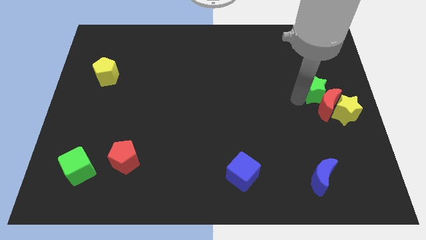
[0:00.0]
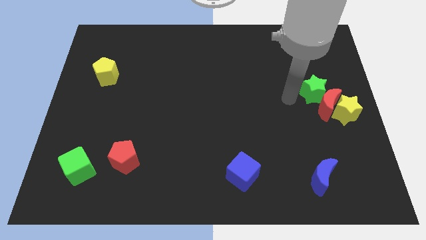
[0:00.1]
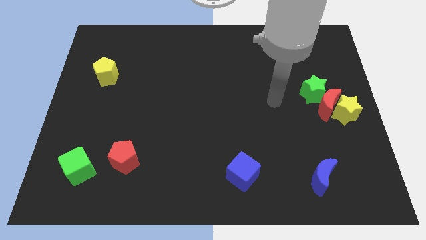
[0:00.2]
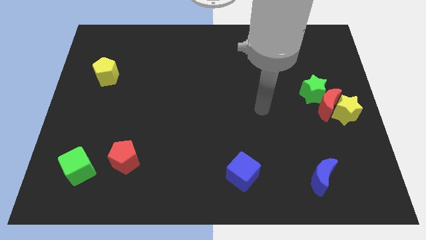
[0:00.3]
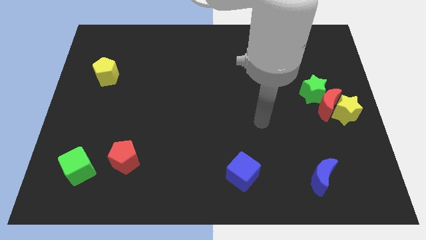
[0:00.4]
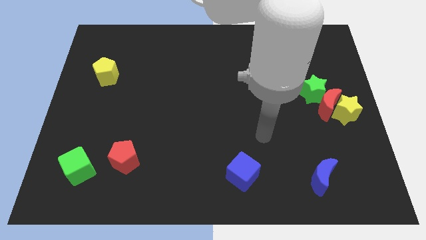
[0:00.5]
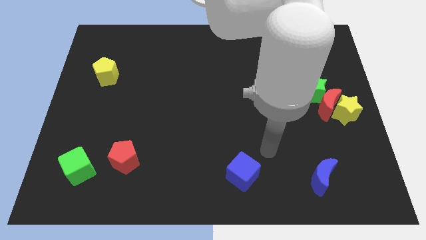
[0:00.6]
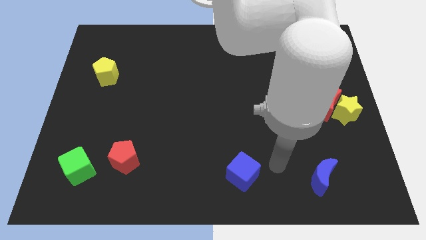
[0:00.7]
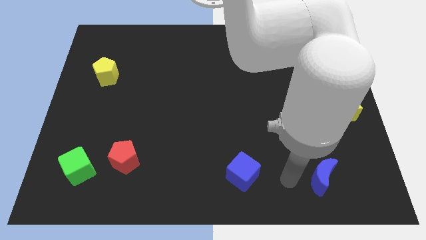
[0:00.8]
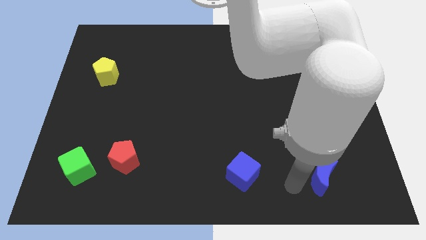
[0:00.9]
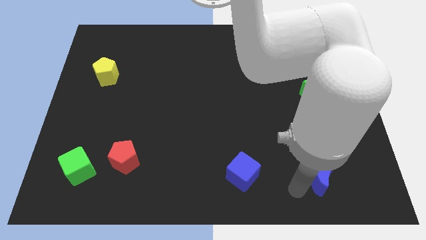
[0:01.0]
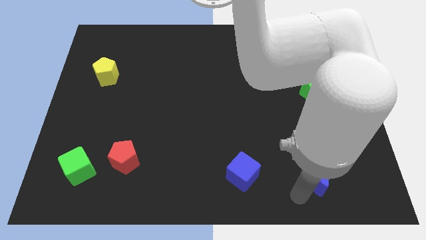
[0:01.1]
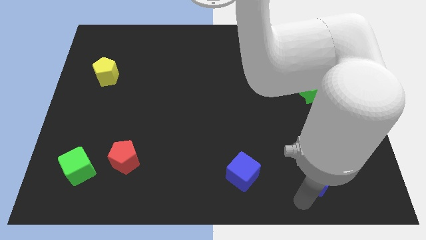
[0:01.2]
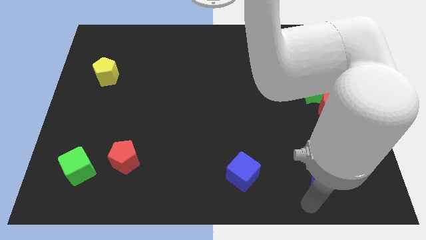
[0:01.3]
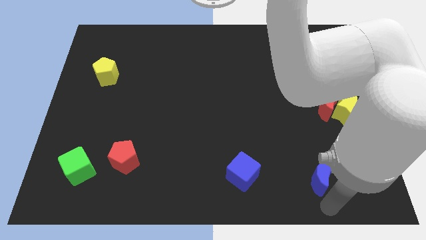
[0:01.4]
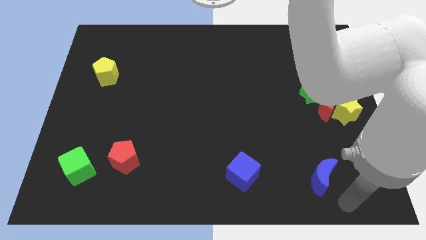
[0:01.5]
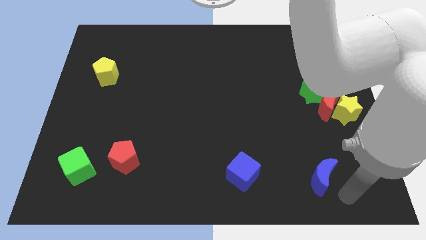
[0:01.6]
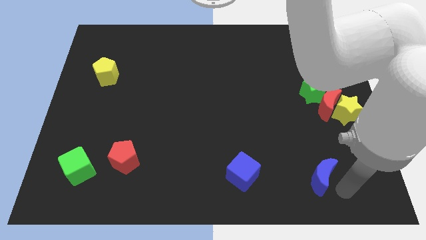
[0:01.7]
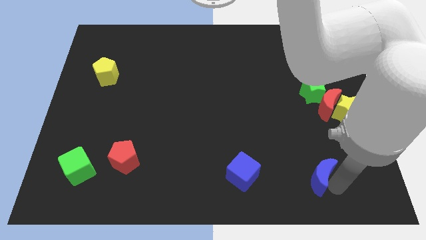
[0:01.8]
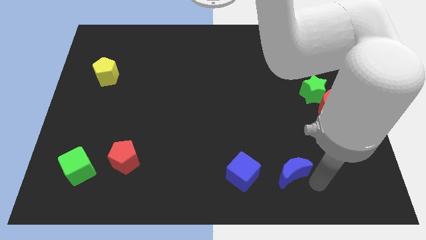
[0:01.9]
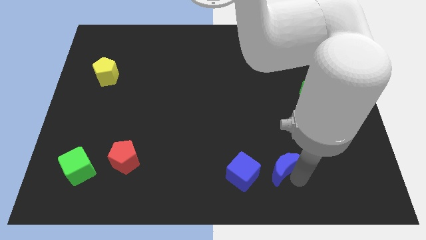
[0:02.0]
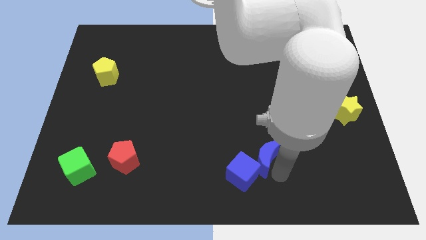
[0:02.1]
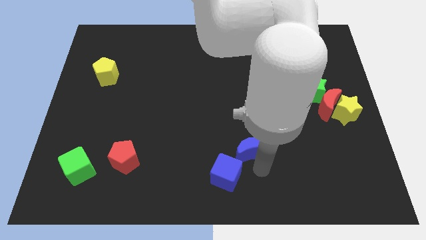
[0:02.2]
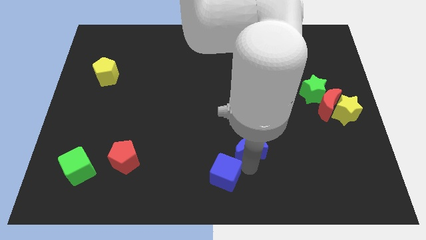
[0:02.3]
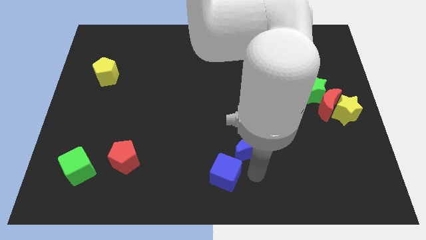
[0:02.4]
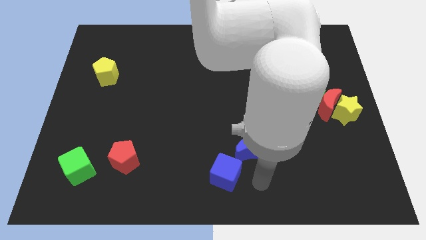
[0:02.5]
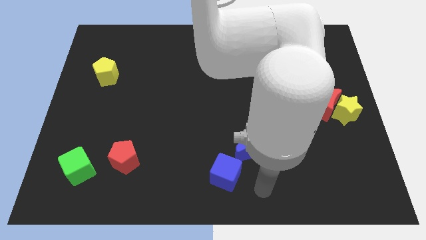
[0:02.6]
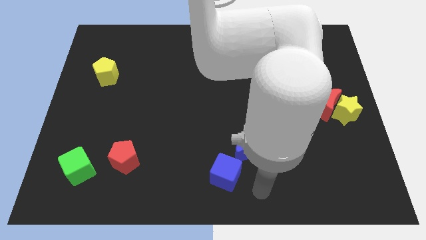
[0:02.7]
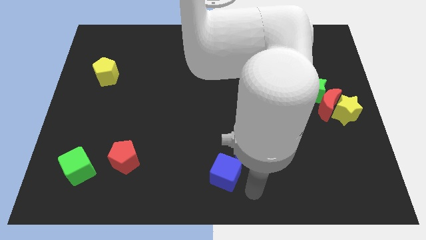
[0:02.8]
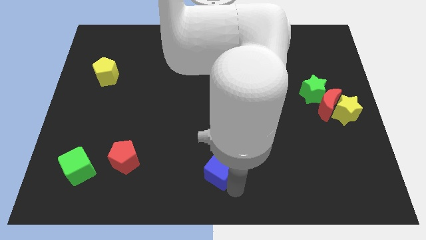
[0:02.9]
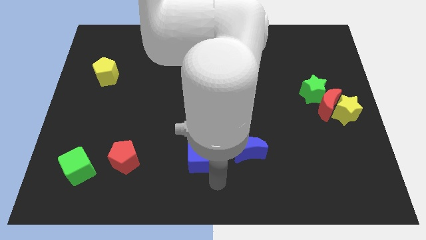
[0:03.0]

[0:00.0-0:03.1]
move the blue blocks to the right side of the red pentagon

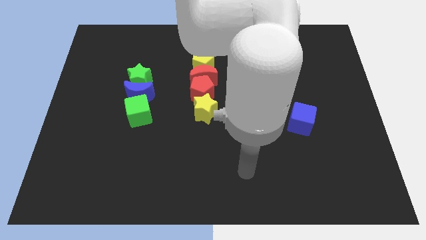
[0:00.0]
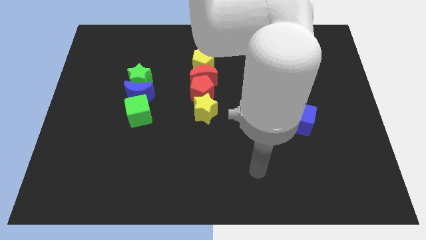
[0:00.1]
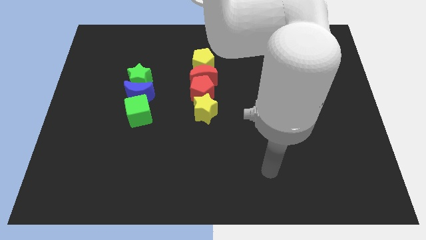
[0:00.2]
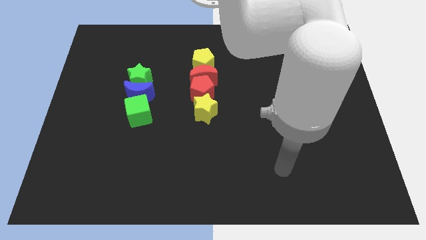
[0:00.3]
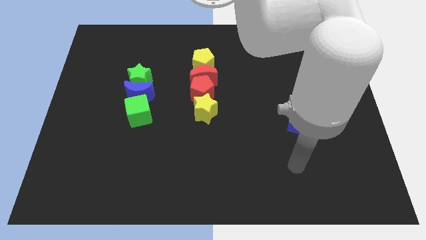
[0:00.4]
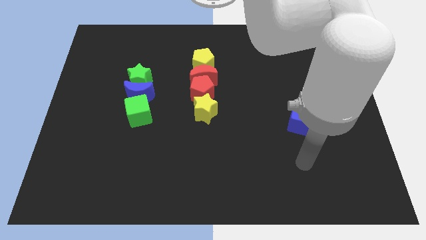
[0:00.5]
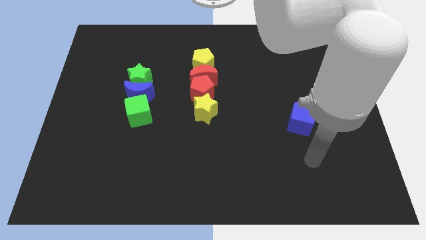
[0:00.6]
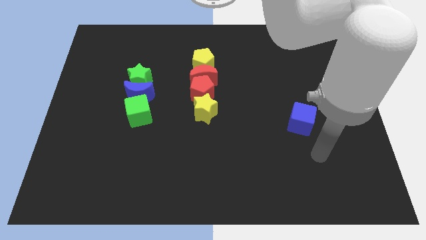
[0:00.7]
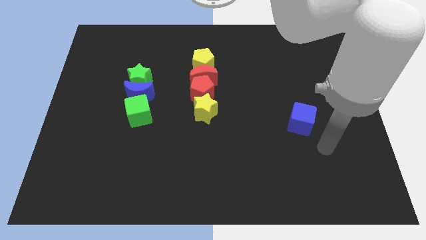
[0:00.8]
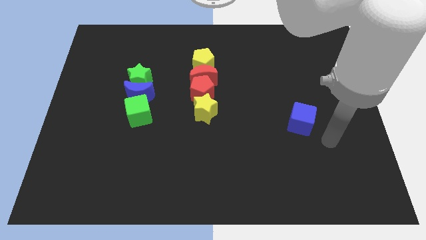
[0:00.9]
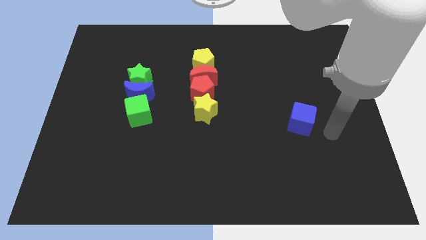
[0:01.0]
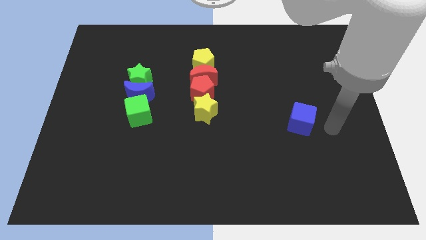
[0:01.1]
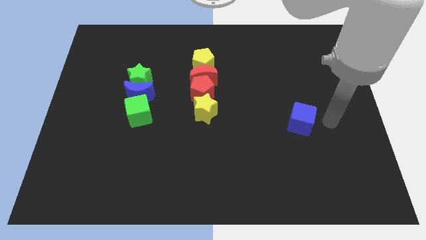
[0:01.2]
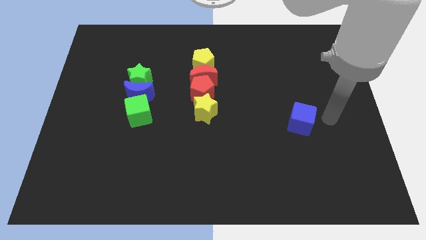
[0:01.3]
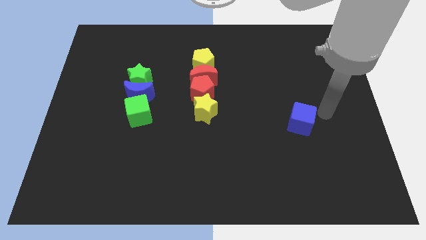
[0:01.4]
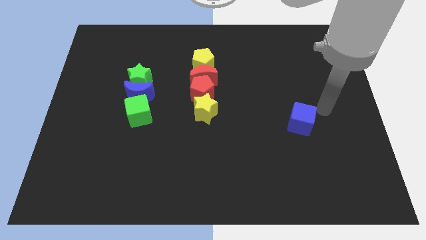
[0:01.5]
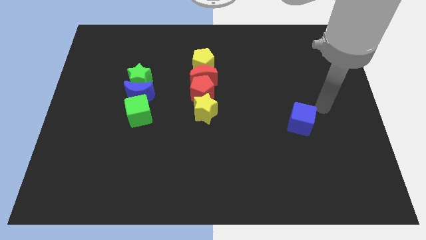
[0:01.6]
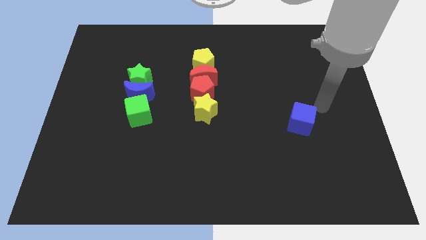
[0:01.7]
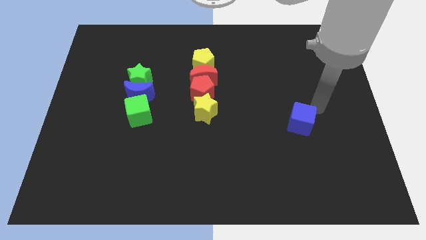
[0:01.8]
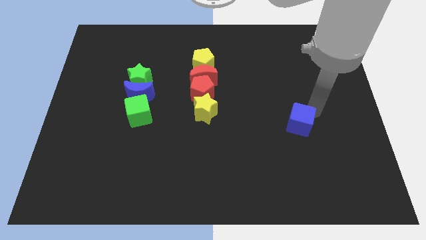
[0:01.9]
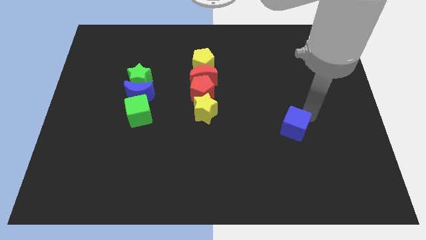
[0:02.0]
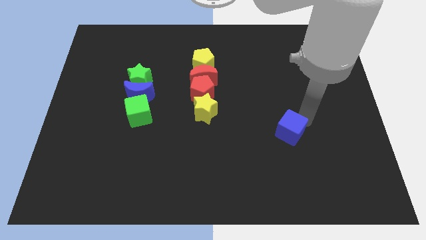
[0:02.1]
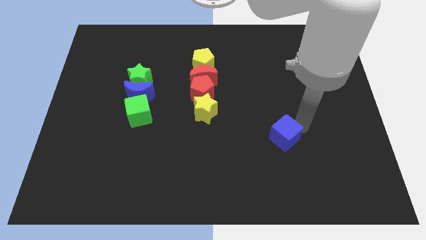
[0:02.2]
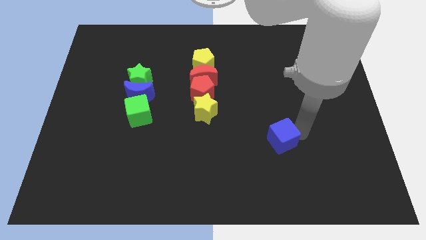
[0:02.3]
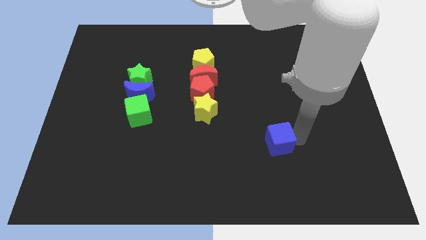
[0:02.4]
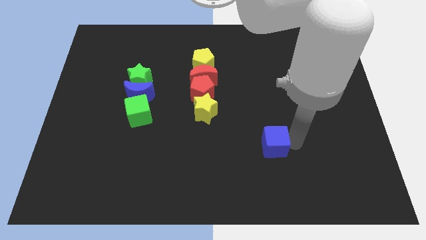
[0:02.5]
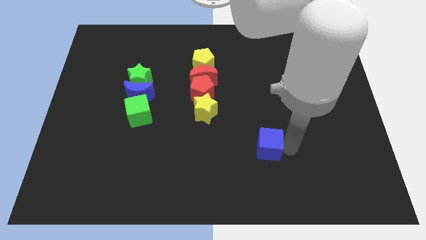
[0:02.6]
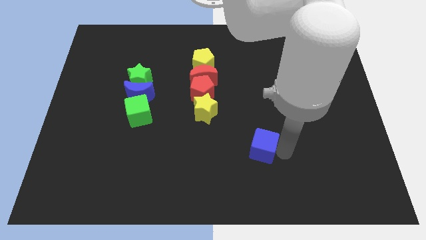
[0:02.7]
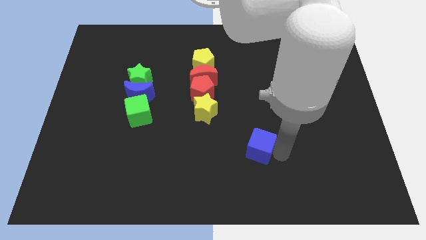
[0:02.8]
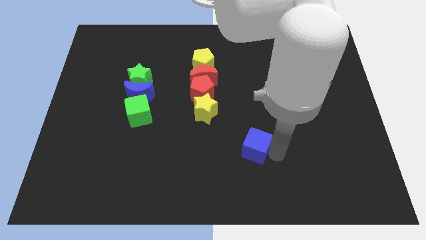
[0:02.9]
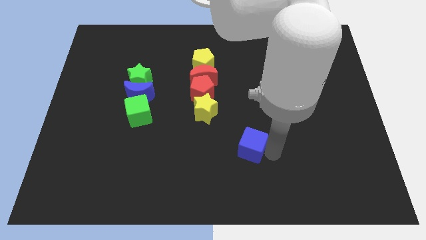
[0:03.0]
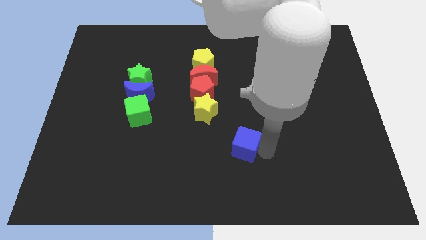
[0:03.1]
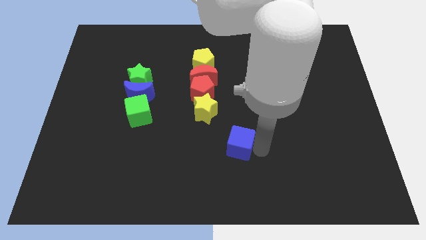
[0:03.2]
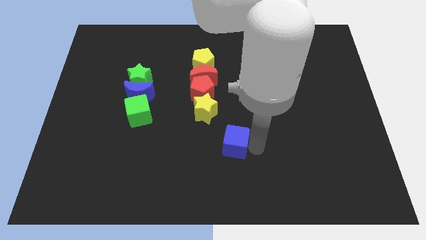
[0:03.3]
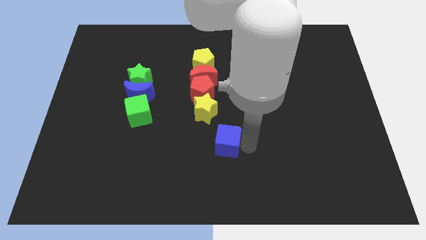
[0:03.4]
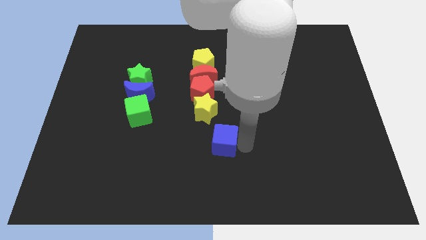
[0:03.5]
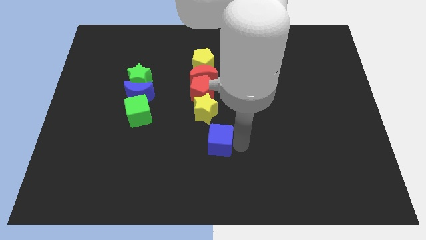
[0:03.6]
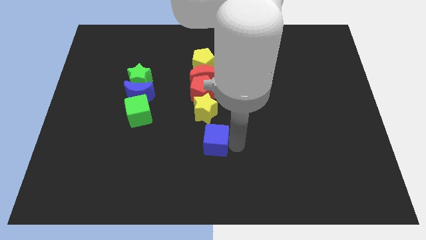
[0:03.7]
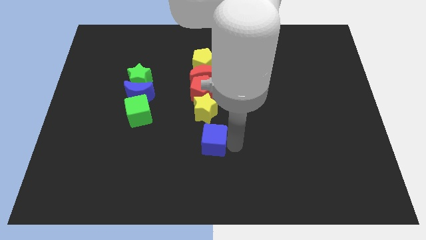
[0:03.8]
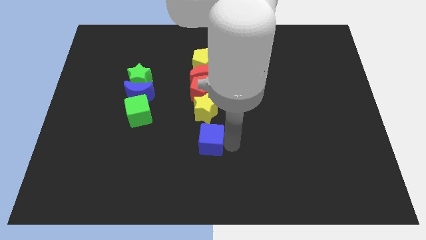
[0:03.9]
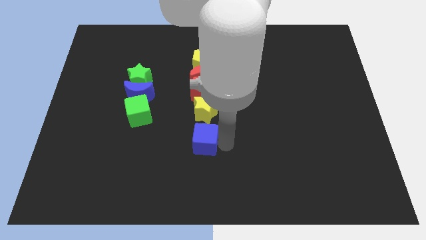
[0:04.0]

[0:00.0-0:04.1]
push blue cube towards yellow star

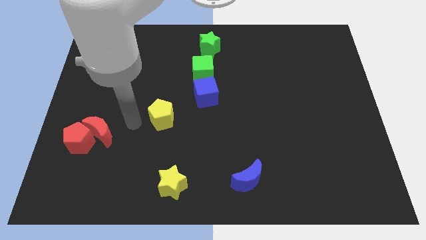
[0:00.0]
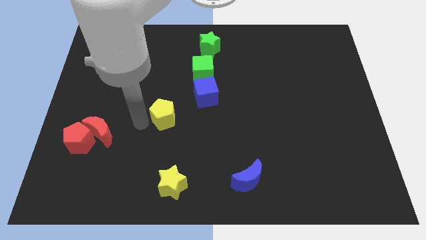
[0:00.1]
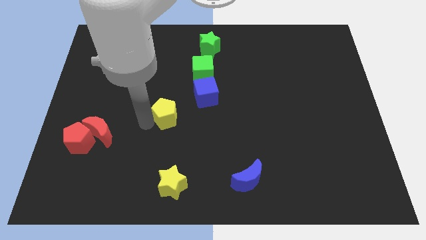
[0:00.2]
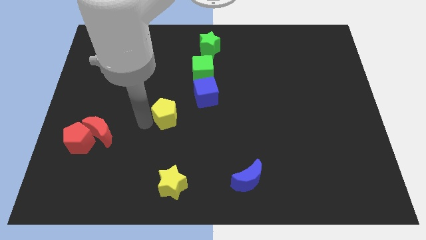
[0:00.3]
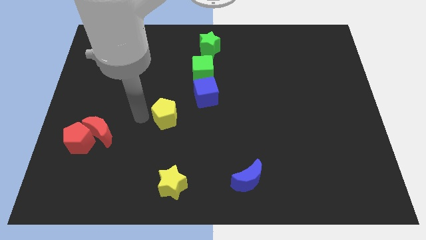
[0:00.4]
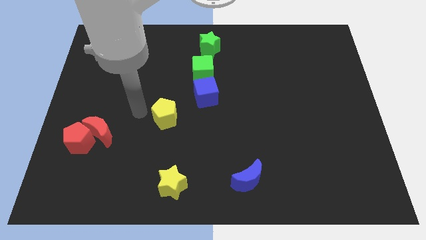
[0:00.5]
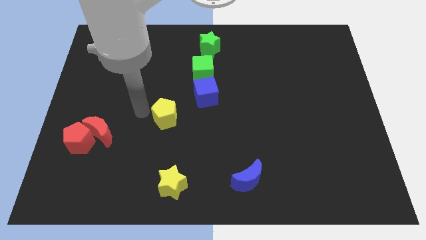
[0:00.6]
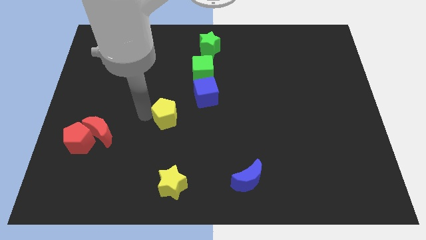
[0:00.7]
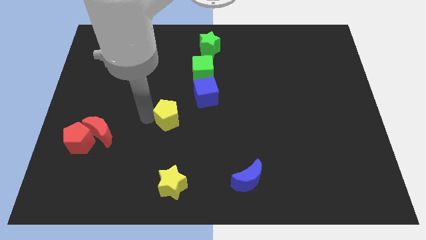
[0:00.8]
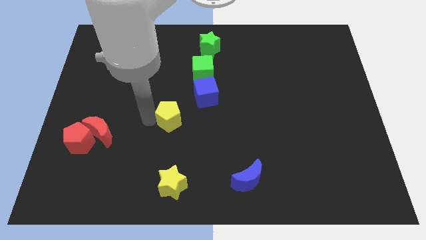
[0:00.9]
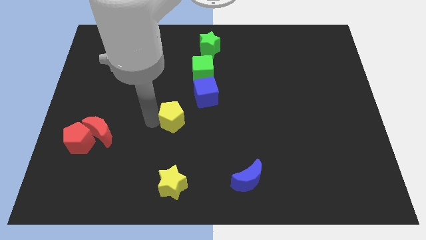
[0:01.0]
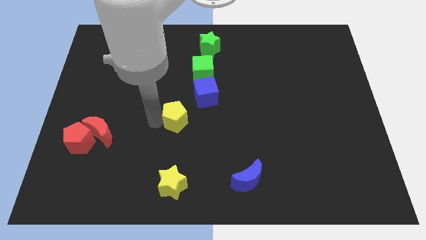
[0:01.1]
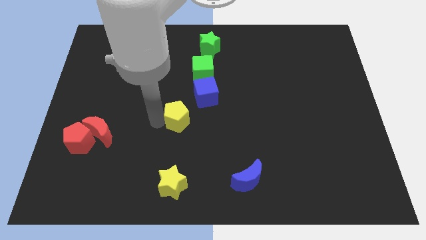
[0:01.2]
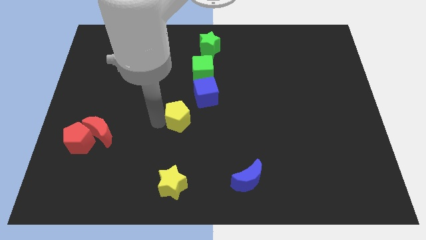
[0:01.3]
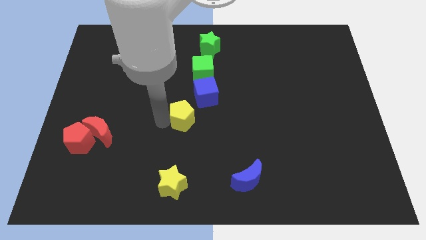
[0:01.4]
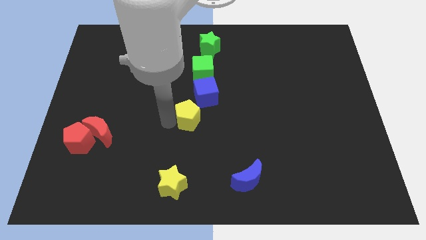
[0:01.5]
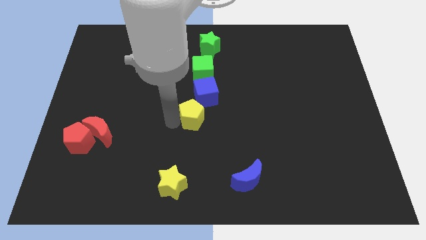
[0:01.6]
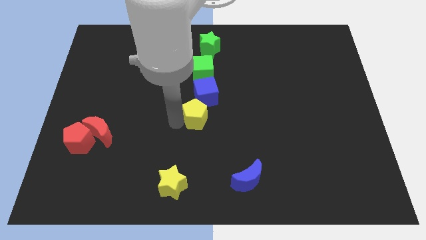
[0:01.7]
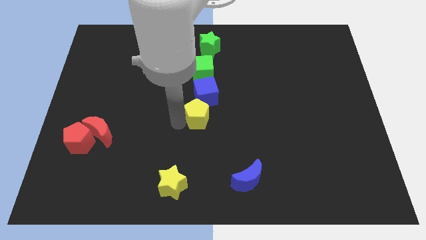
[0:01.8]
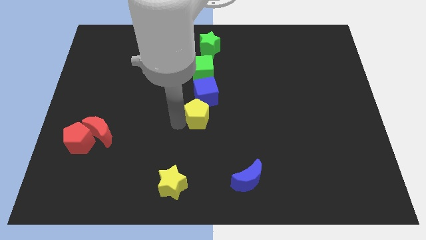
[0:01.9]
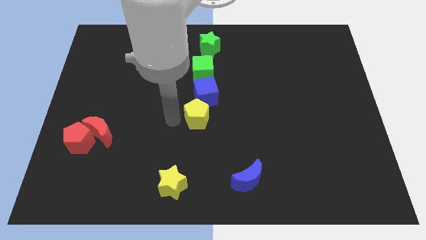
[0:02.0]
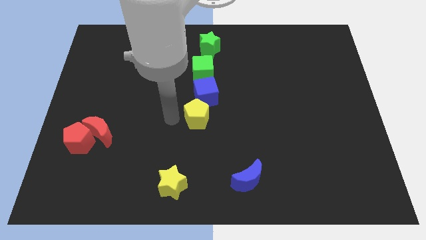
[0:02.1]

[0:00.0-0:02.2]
place the yellow pentagon below the blue cube
